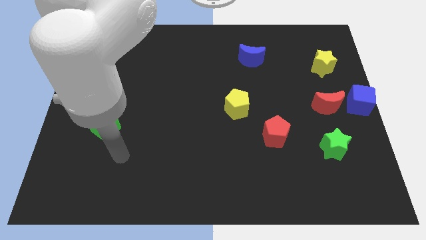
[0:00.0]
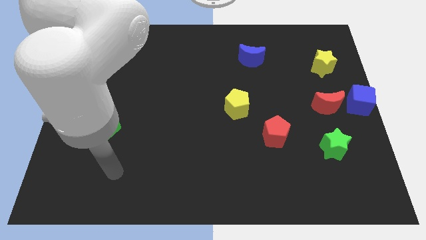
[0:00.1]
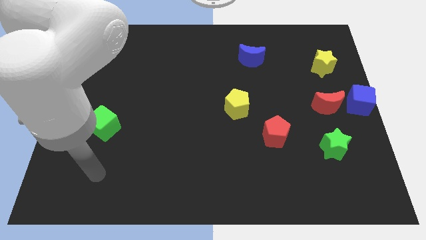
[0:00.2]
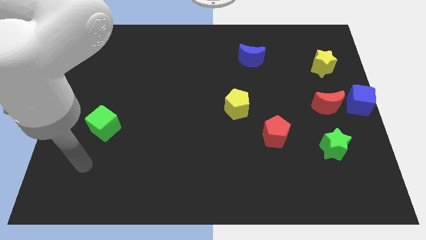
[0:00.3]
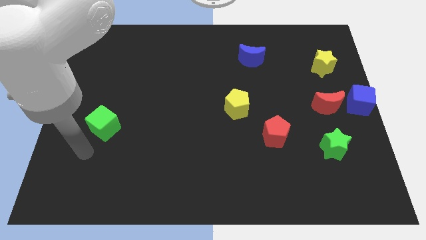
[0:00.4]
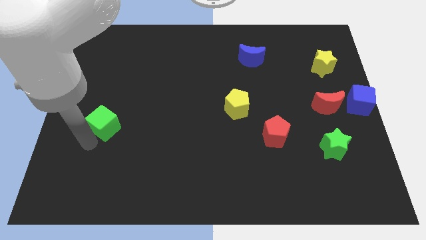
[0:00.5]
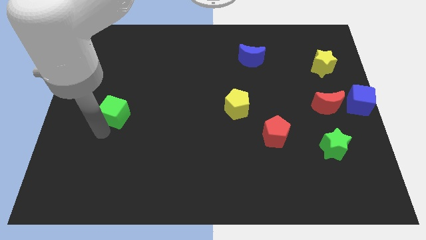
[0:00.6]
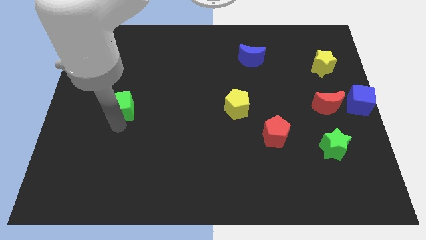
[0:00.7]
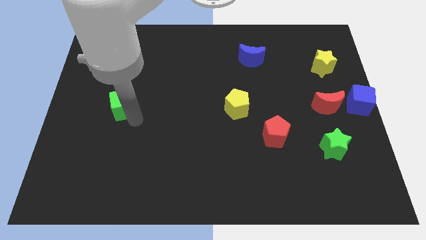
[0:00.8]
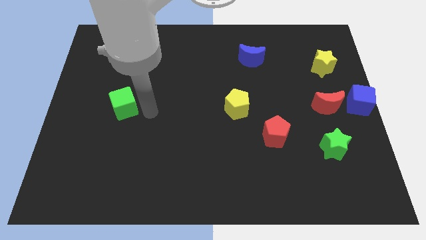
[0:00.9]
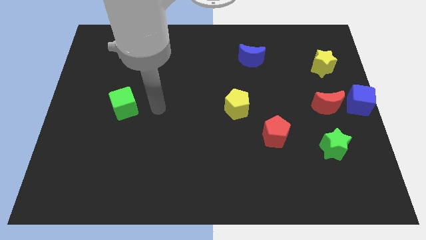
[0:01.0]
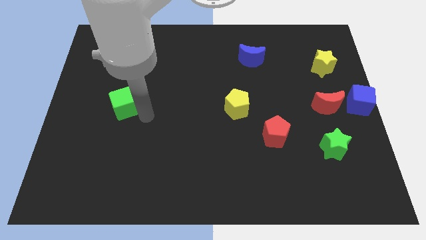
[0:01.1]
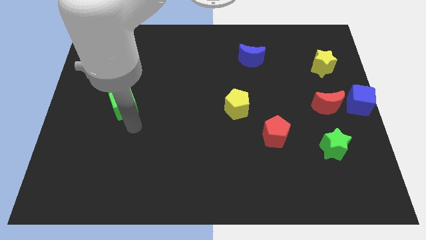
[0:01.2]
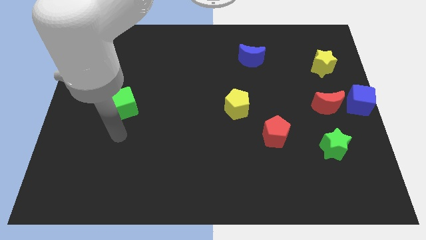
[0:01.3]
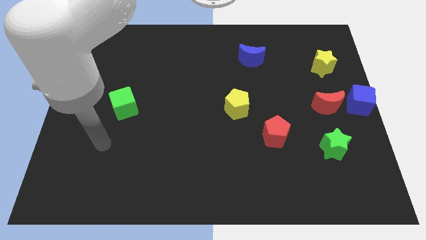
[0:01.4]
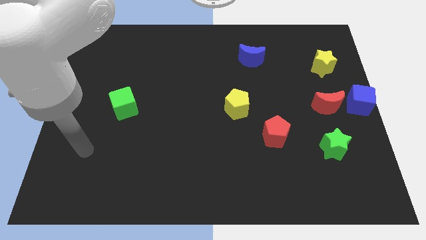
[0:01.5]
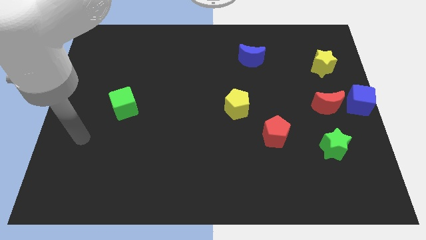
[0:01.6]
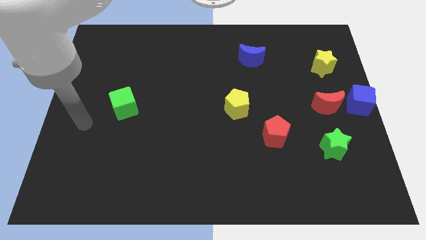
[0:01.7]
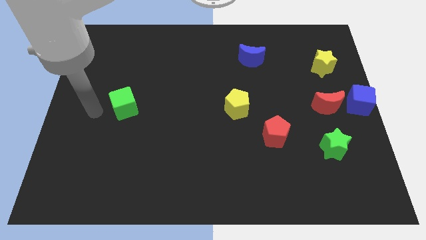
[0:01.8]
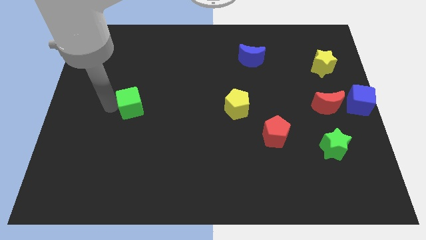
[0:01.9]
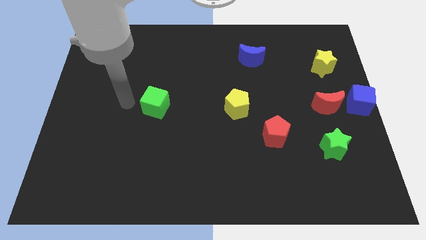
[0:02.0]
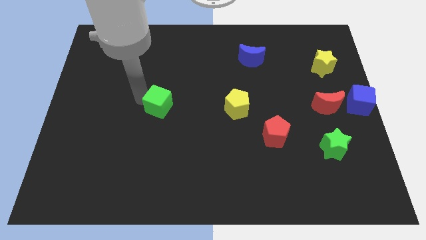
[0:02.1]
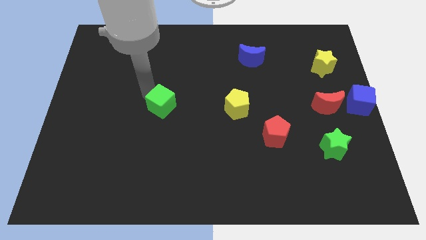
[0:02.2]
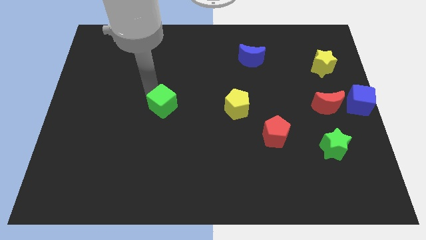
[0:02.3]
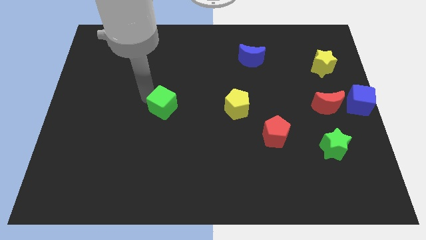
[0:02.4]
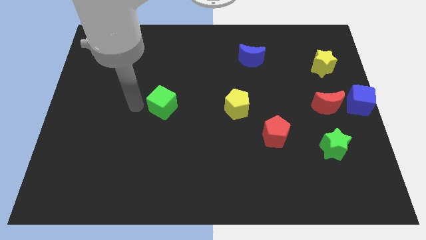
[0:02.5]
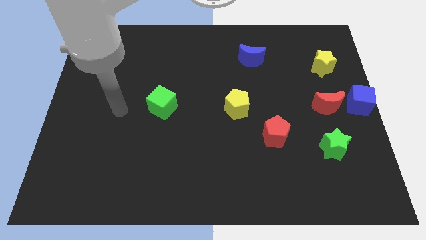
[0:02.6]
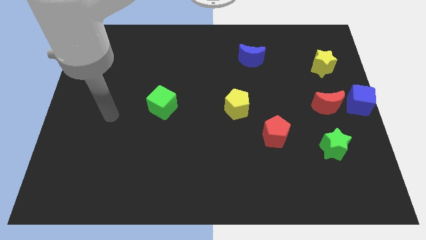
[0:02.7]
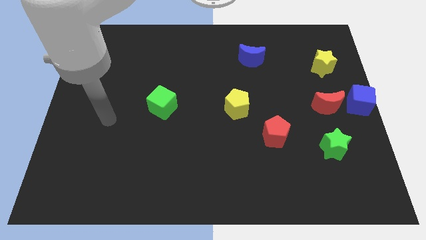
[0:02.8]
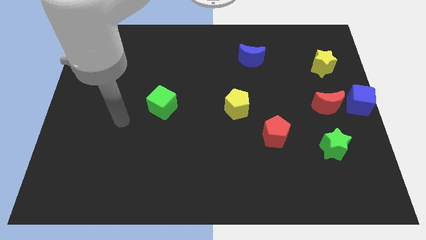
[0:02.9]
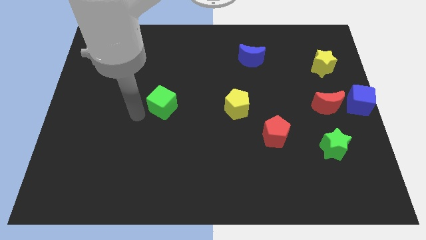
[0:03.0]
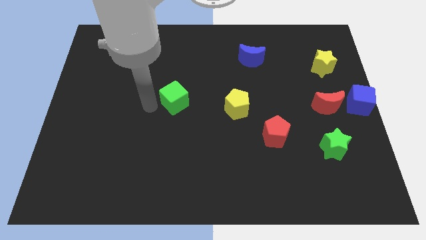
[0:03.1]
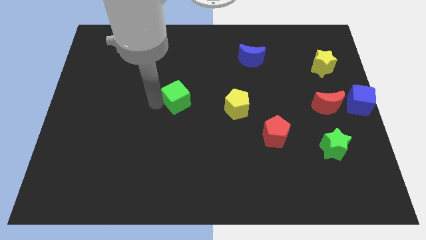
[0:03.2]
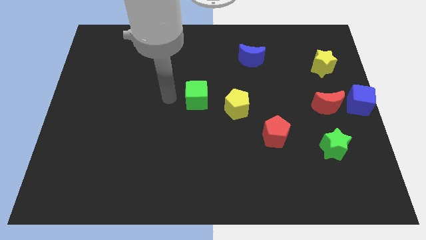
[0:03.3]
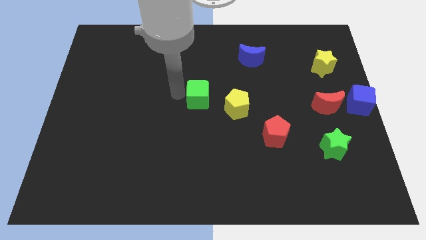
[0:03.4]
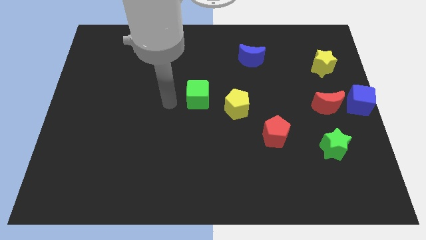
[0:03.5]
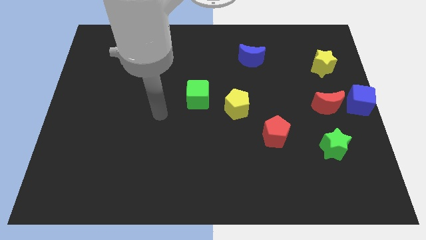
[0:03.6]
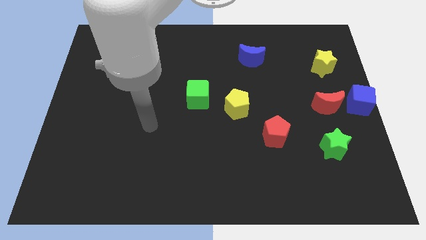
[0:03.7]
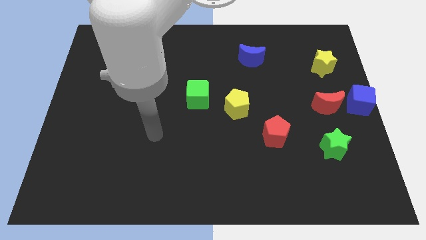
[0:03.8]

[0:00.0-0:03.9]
place the green cube towards the top left side of the yellow pentagon

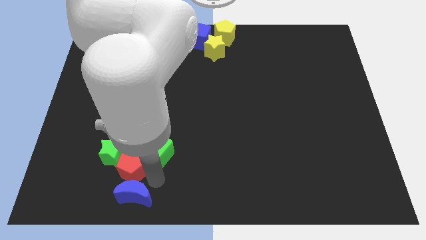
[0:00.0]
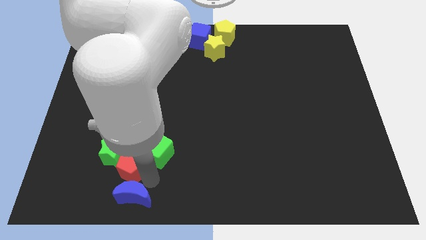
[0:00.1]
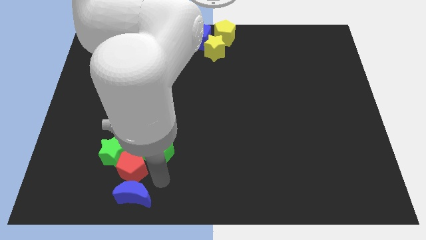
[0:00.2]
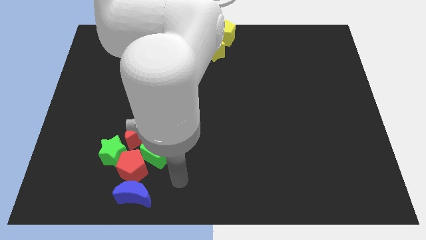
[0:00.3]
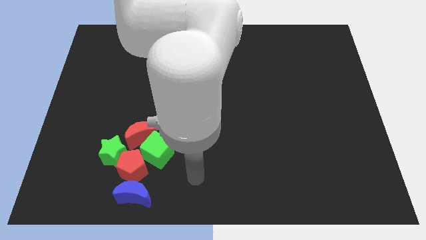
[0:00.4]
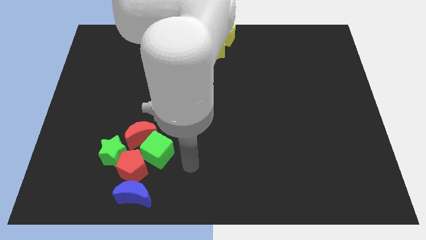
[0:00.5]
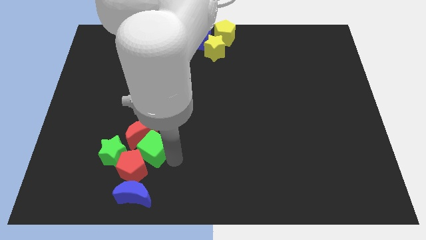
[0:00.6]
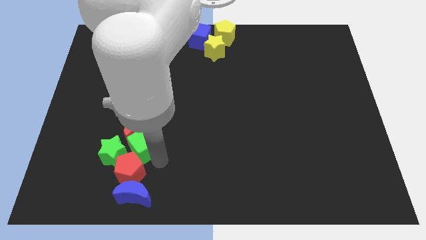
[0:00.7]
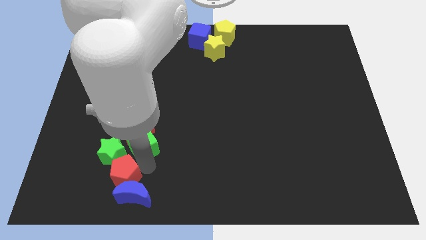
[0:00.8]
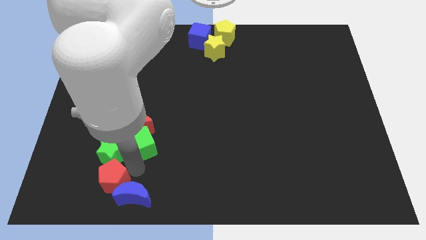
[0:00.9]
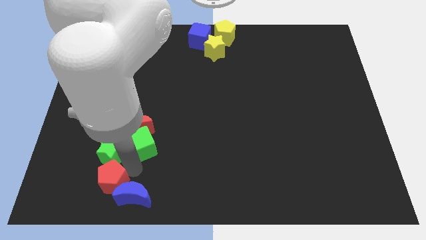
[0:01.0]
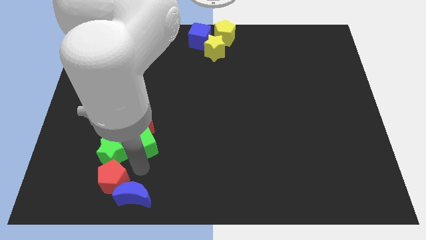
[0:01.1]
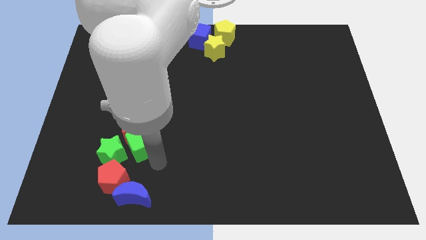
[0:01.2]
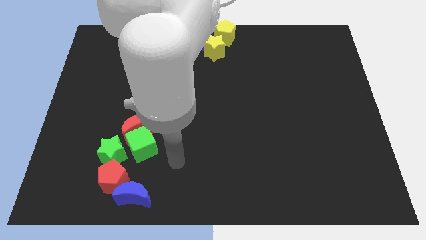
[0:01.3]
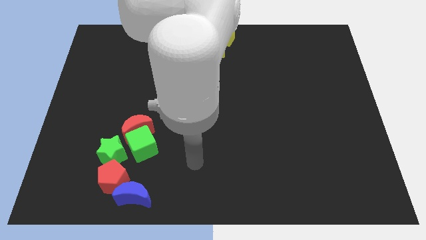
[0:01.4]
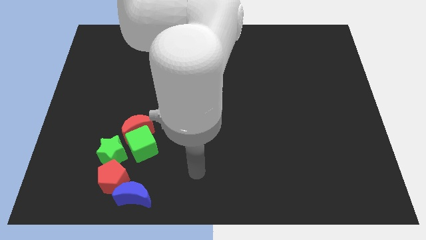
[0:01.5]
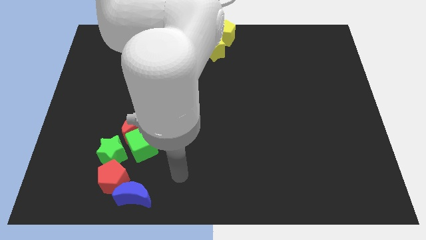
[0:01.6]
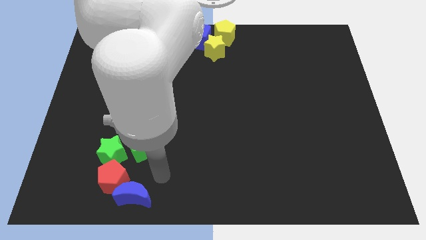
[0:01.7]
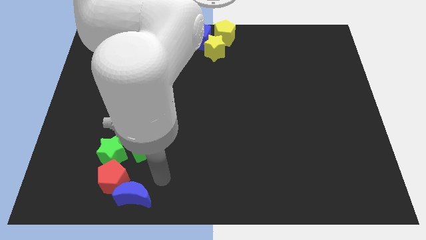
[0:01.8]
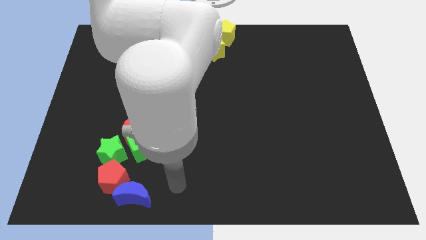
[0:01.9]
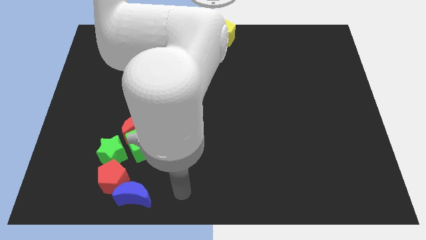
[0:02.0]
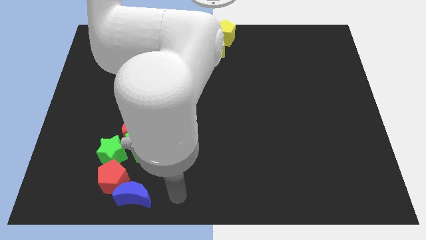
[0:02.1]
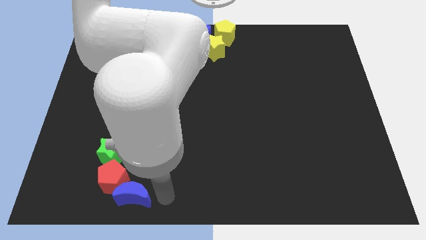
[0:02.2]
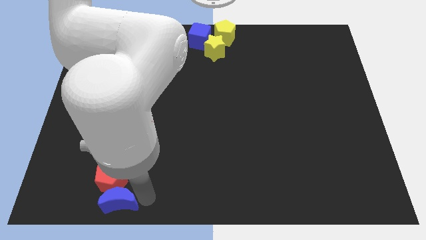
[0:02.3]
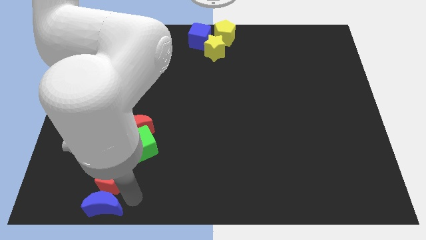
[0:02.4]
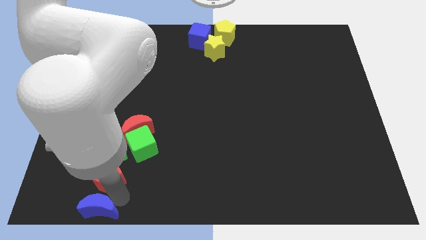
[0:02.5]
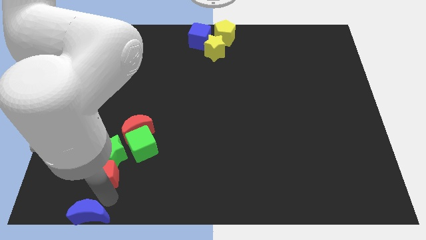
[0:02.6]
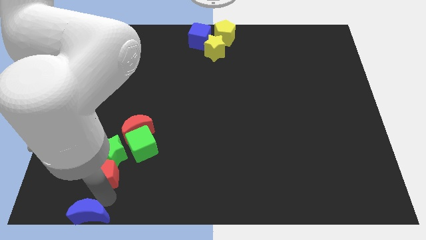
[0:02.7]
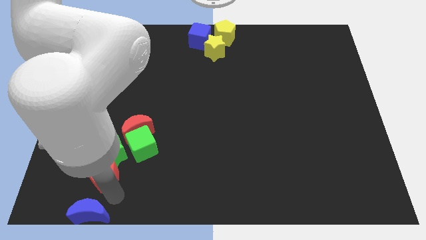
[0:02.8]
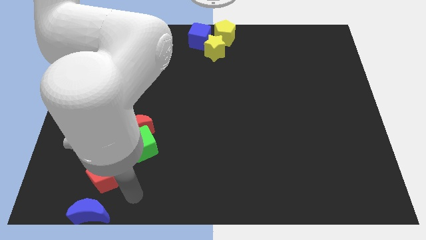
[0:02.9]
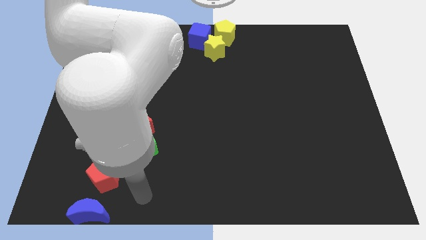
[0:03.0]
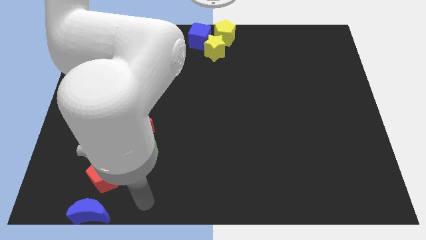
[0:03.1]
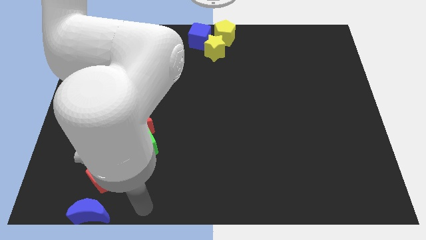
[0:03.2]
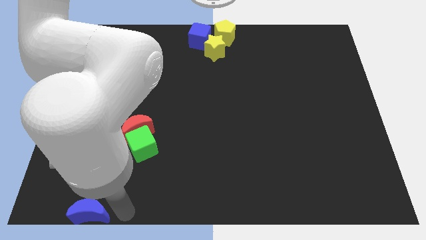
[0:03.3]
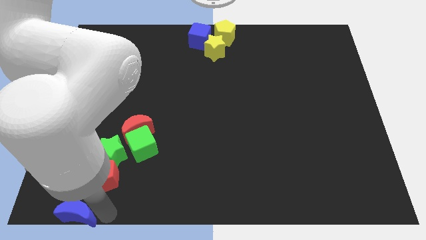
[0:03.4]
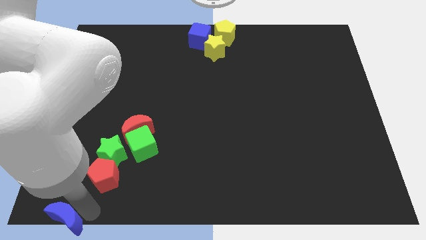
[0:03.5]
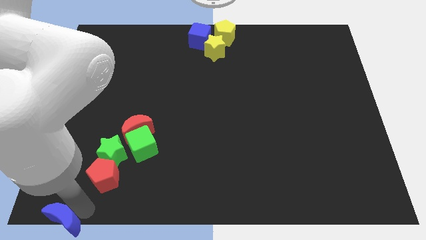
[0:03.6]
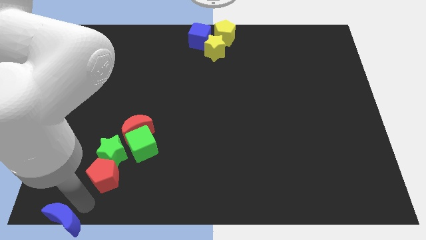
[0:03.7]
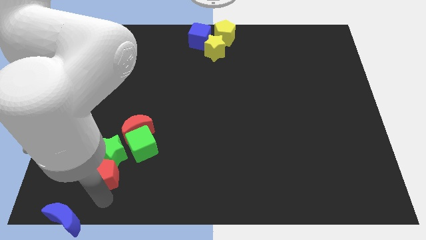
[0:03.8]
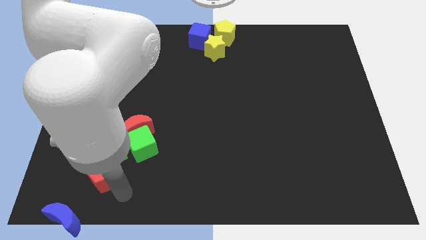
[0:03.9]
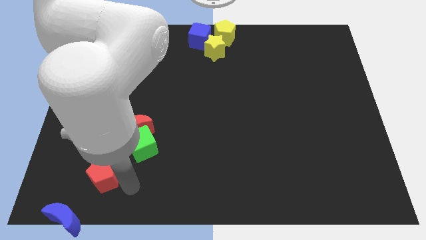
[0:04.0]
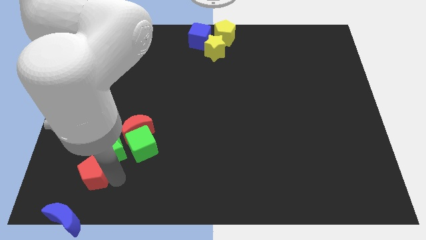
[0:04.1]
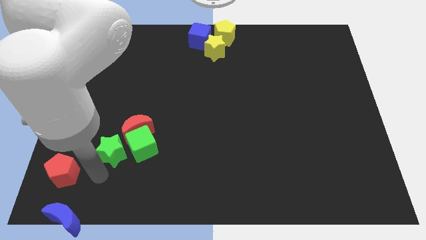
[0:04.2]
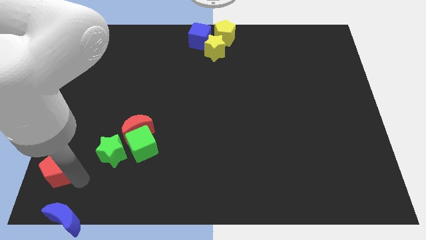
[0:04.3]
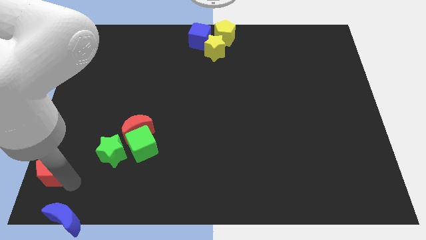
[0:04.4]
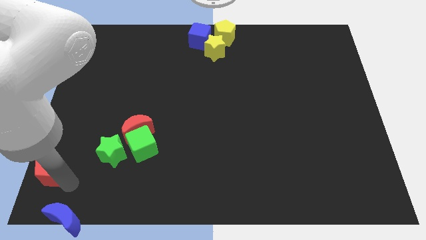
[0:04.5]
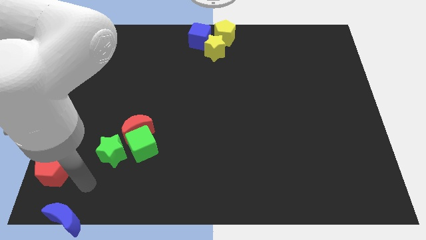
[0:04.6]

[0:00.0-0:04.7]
separate the red pentagon and blue crescent from the group of blocks

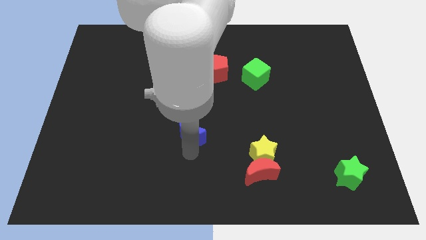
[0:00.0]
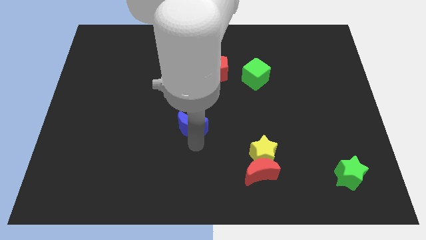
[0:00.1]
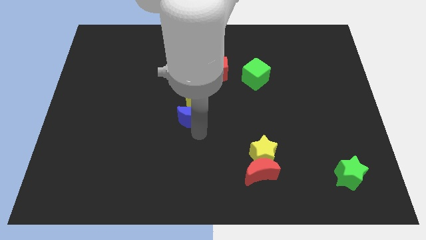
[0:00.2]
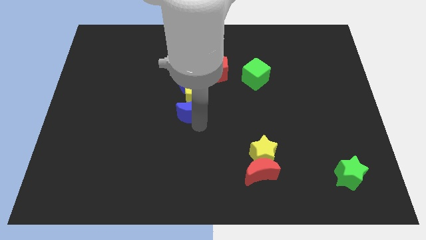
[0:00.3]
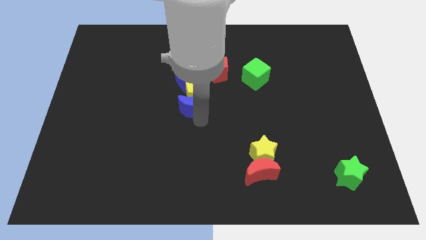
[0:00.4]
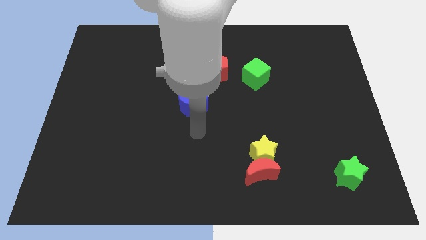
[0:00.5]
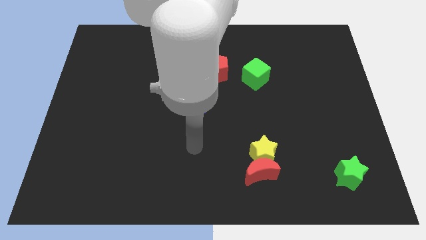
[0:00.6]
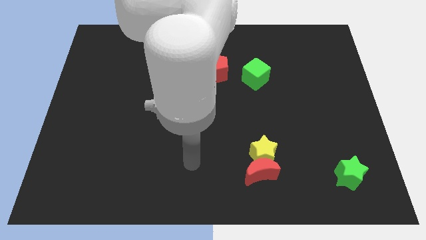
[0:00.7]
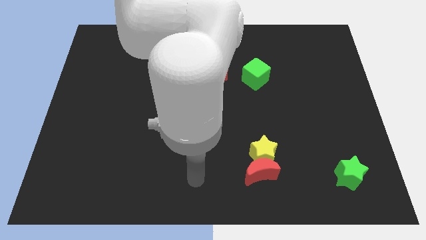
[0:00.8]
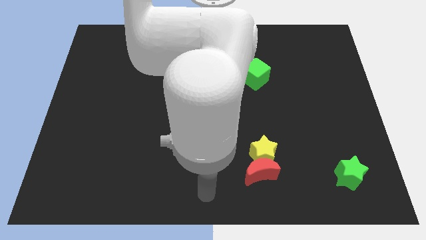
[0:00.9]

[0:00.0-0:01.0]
move the blue crescent towards the yellow pentagon
